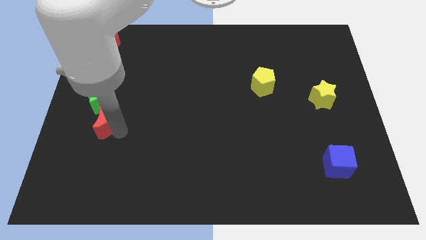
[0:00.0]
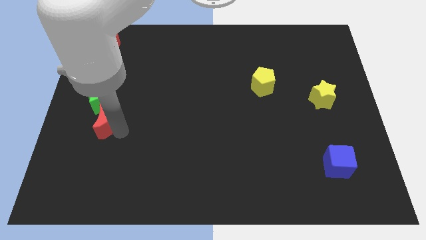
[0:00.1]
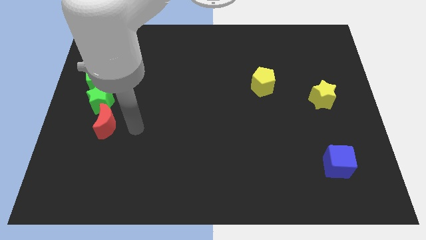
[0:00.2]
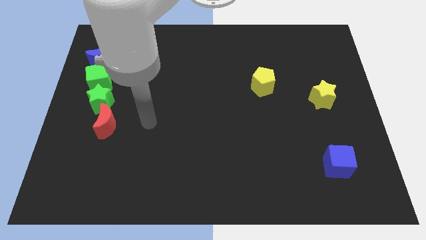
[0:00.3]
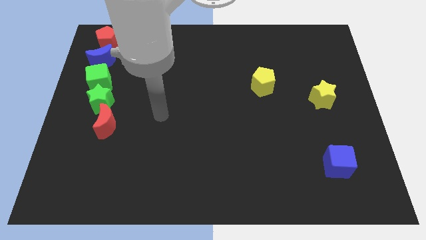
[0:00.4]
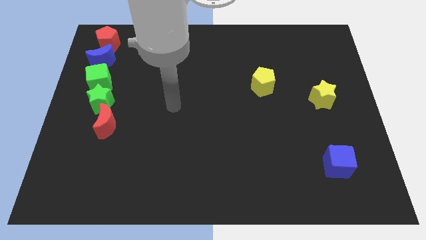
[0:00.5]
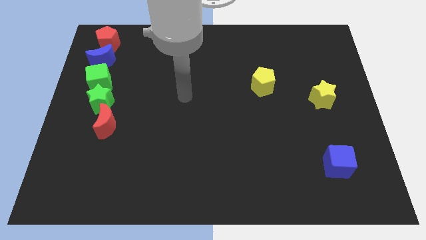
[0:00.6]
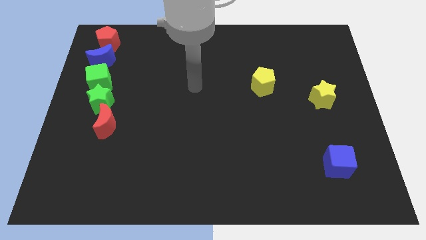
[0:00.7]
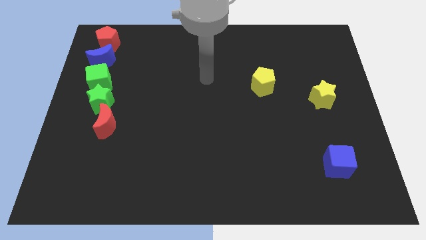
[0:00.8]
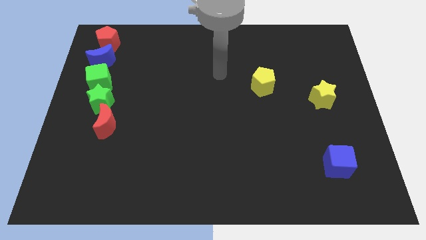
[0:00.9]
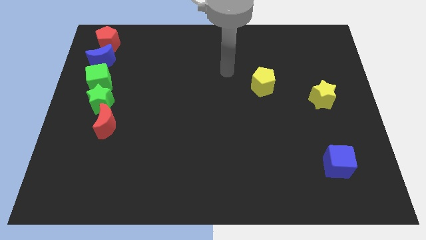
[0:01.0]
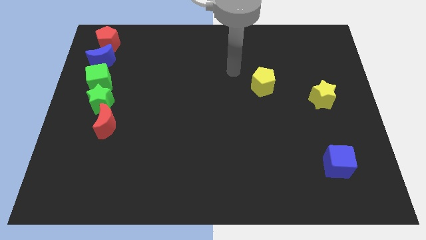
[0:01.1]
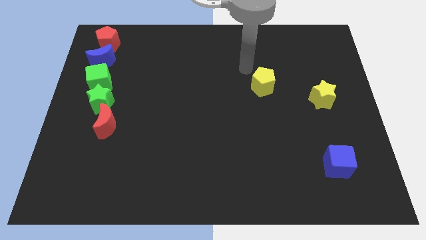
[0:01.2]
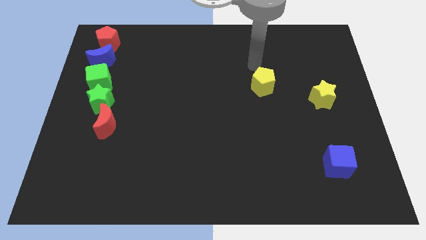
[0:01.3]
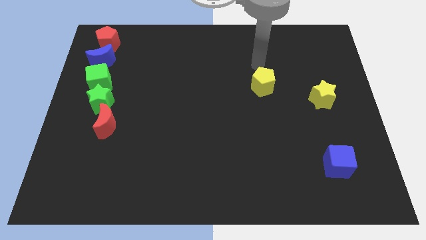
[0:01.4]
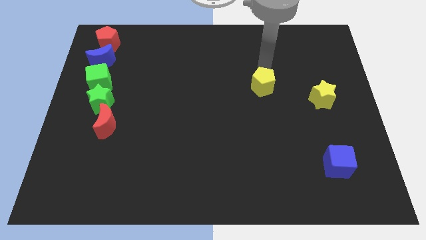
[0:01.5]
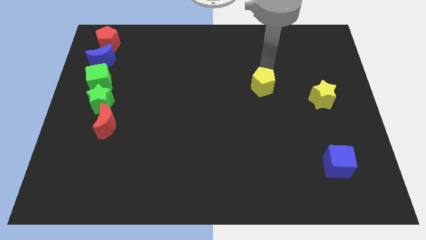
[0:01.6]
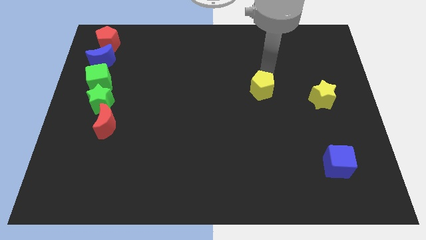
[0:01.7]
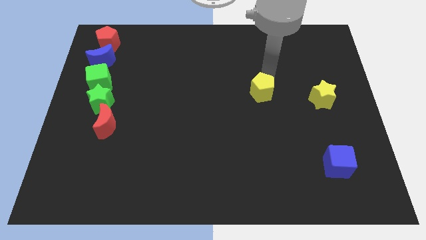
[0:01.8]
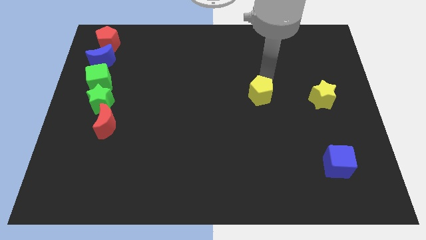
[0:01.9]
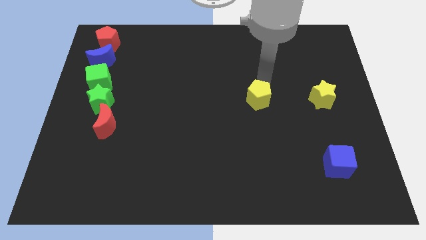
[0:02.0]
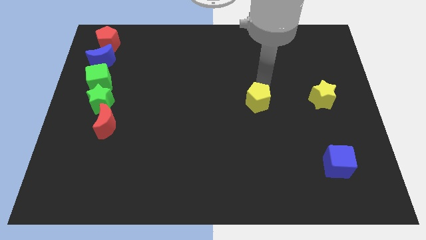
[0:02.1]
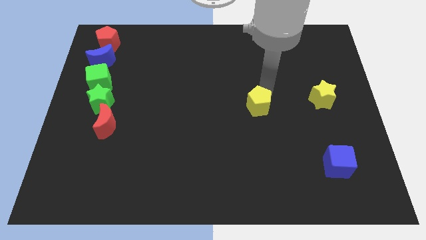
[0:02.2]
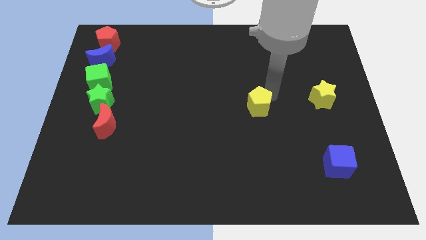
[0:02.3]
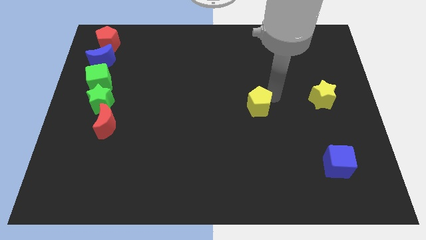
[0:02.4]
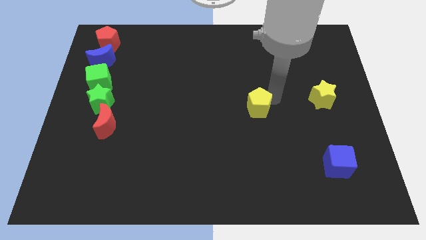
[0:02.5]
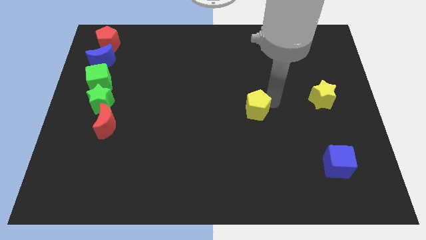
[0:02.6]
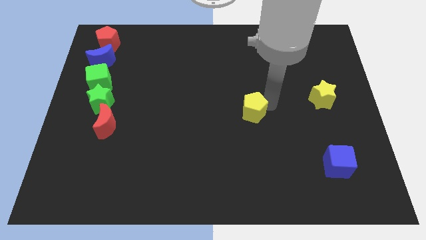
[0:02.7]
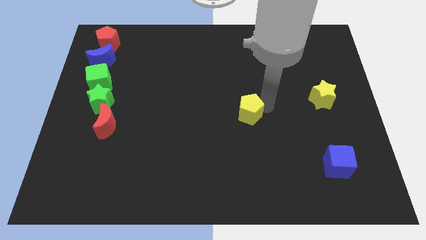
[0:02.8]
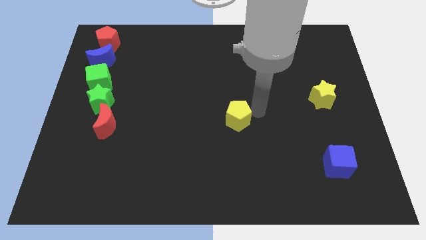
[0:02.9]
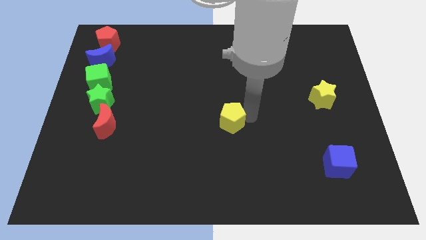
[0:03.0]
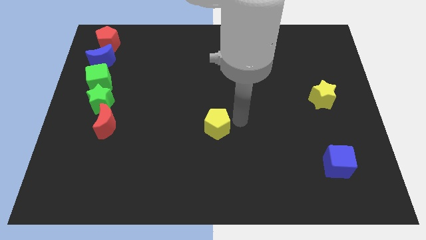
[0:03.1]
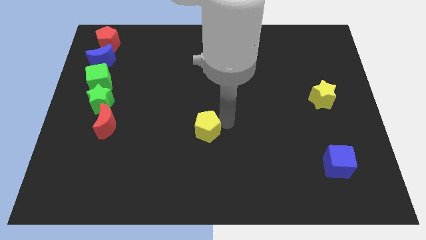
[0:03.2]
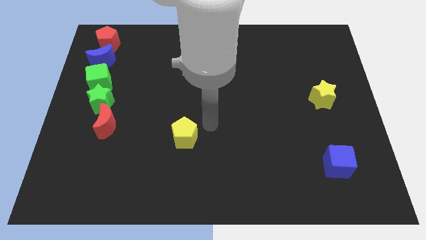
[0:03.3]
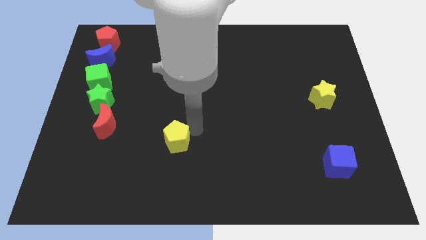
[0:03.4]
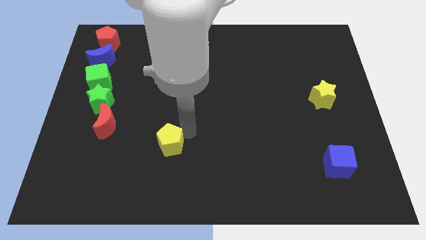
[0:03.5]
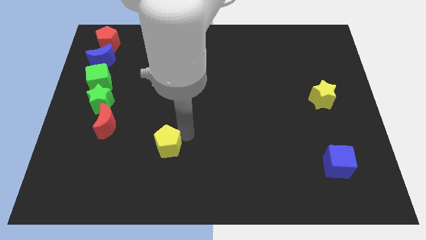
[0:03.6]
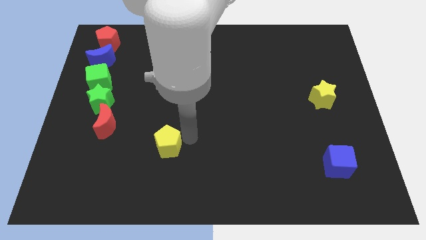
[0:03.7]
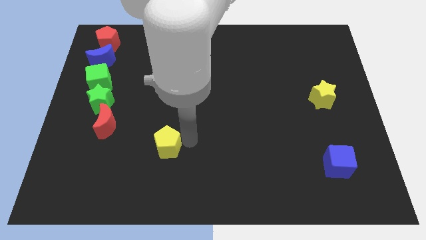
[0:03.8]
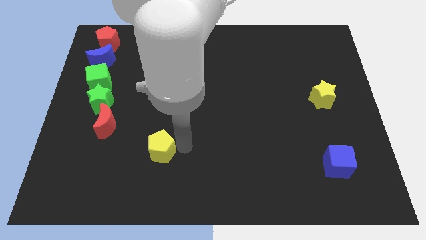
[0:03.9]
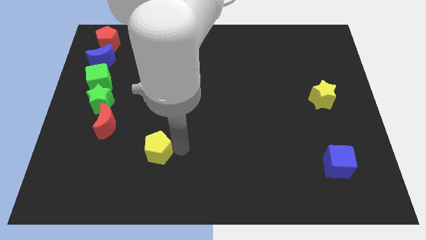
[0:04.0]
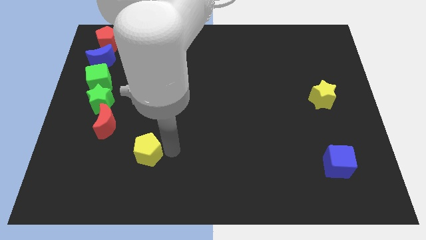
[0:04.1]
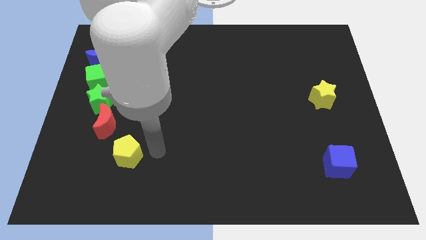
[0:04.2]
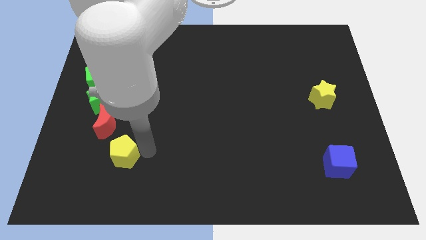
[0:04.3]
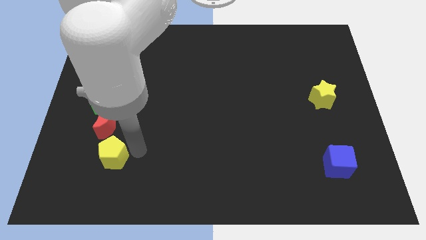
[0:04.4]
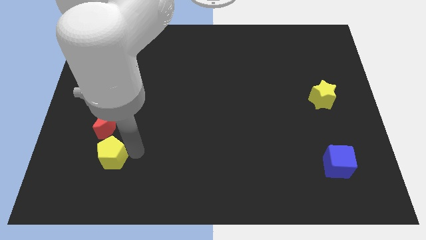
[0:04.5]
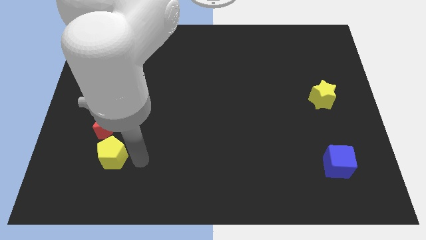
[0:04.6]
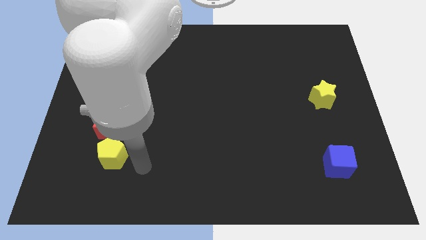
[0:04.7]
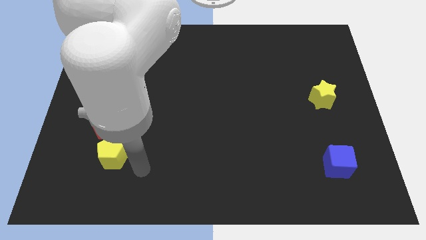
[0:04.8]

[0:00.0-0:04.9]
place yellow pentagon below below red moon

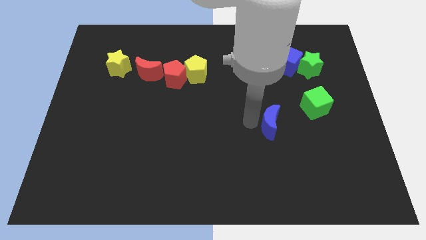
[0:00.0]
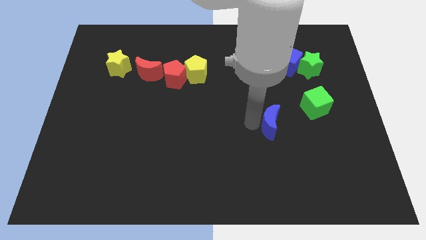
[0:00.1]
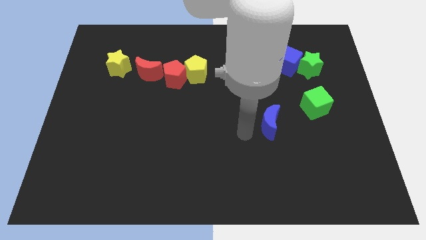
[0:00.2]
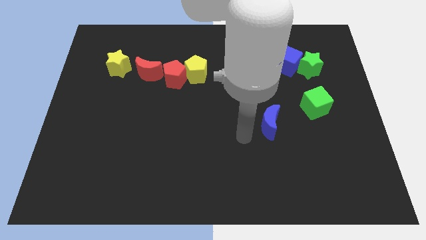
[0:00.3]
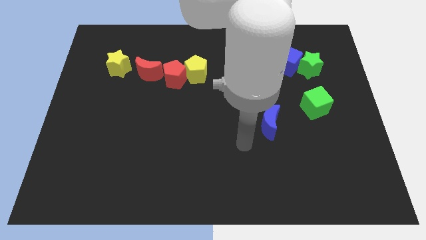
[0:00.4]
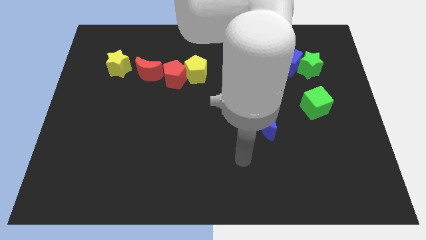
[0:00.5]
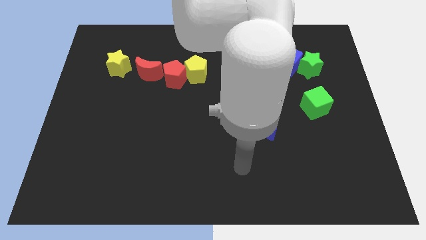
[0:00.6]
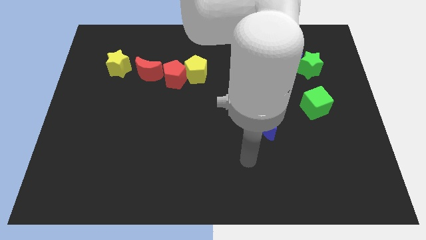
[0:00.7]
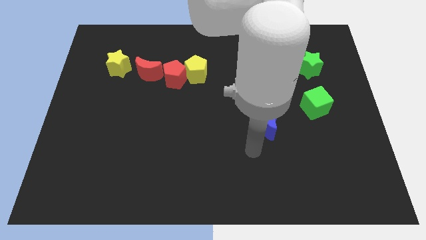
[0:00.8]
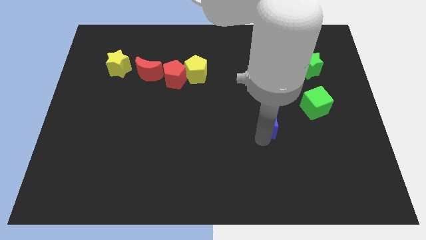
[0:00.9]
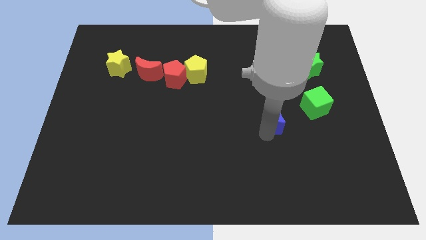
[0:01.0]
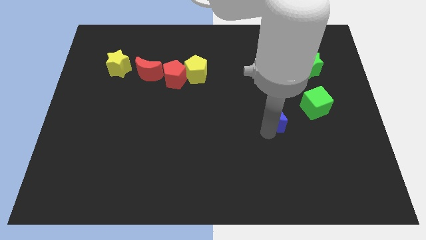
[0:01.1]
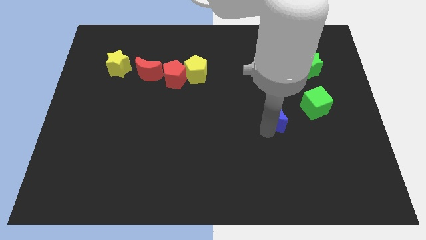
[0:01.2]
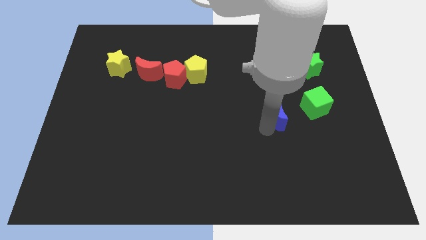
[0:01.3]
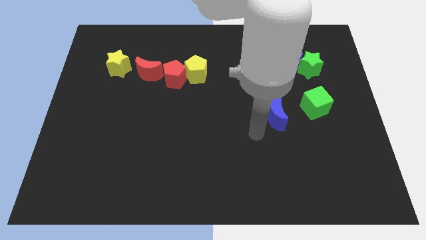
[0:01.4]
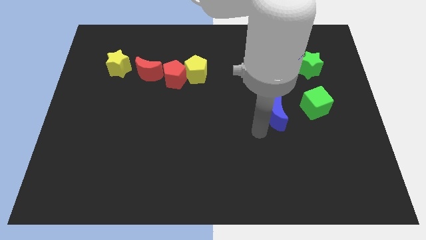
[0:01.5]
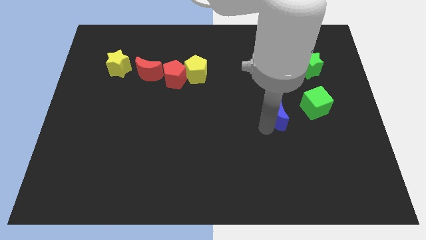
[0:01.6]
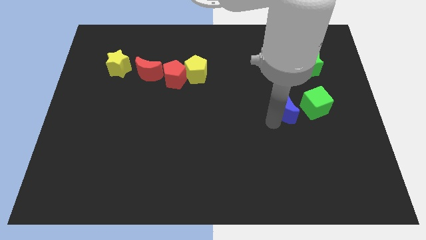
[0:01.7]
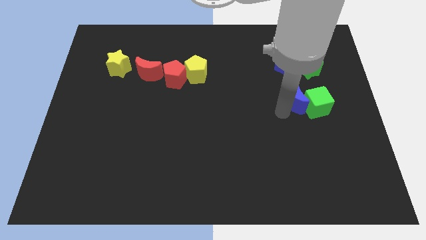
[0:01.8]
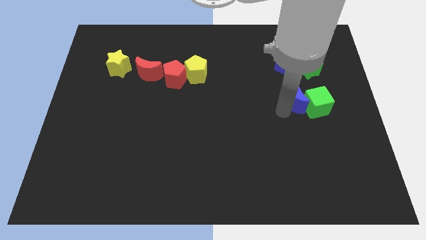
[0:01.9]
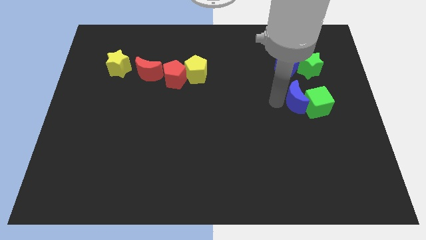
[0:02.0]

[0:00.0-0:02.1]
move the blue moon into the green cube

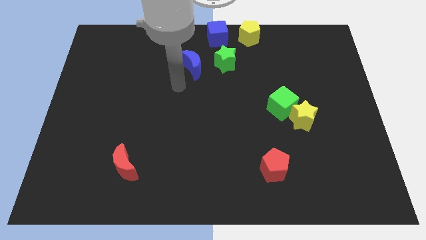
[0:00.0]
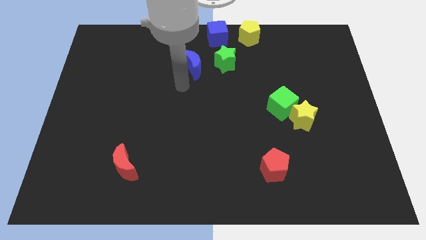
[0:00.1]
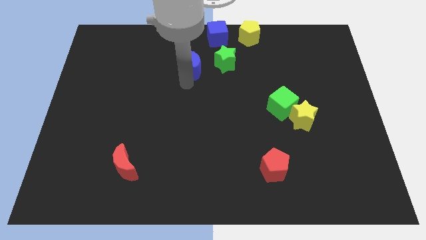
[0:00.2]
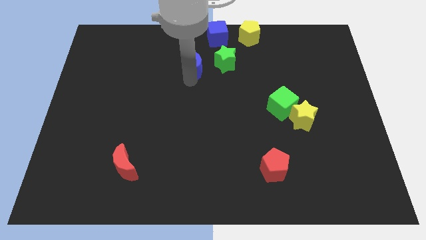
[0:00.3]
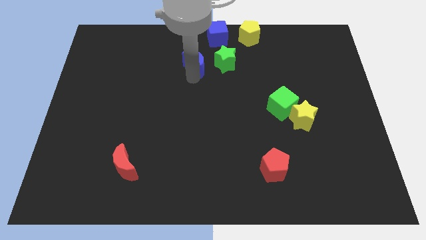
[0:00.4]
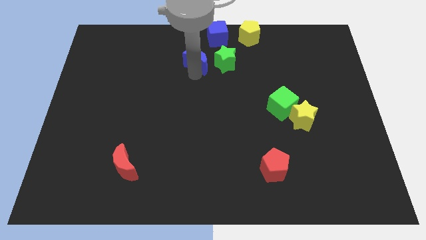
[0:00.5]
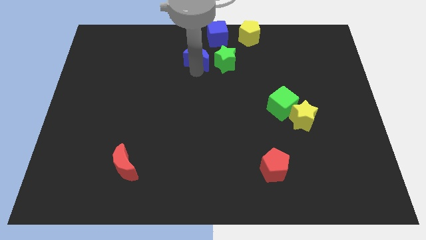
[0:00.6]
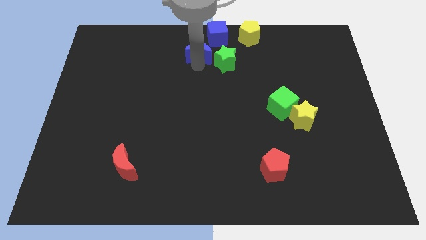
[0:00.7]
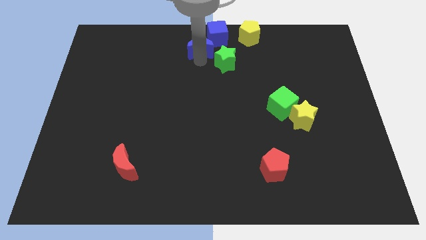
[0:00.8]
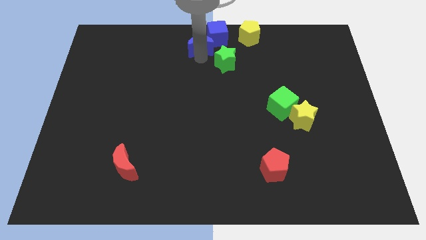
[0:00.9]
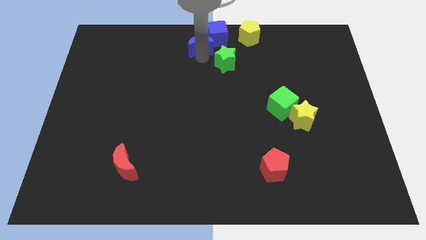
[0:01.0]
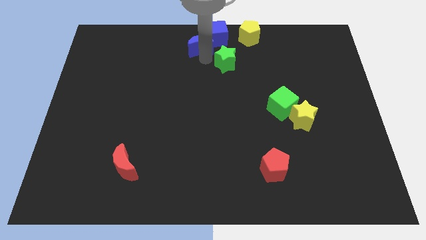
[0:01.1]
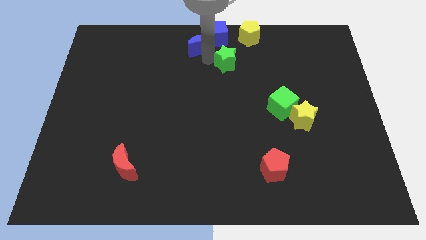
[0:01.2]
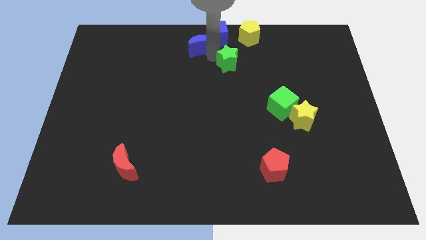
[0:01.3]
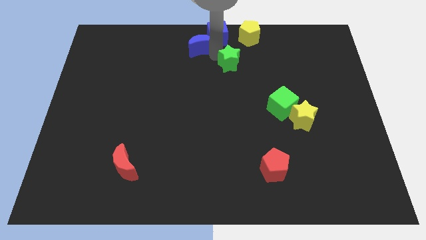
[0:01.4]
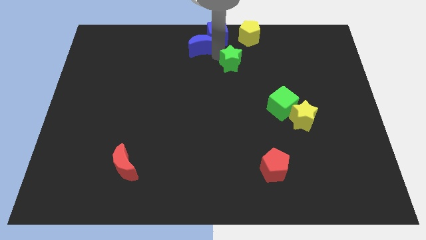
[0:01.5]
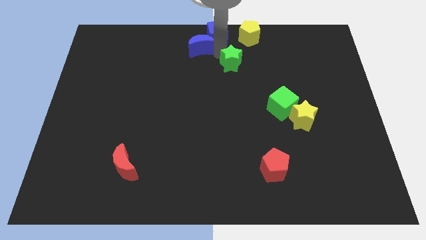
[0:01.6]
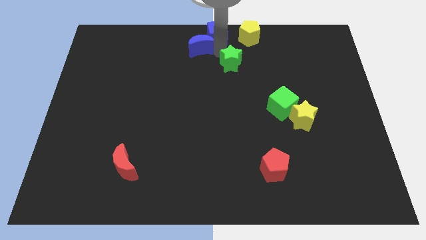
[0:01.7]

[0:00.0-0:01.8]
push the blue moon to the bottom left side of the blue cube

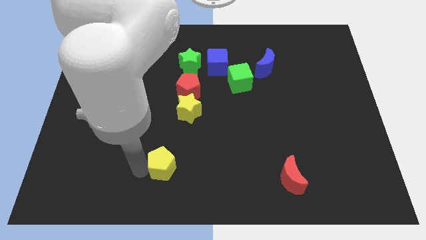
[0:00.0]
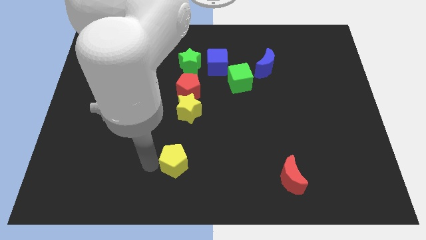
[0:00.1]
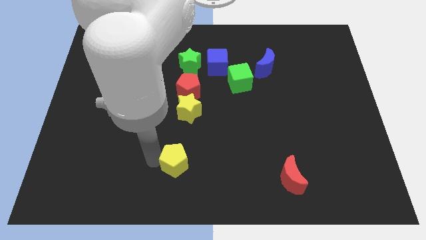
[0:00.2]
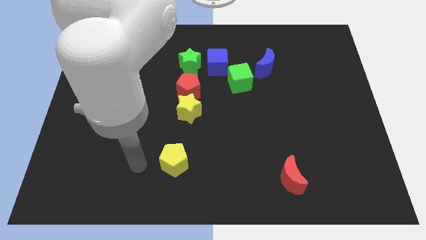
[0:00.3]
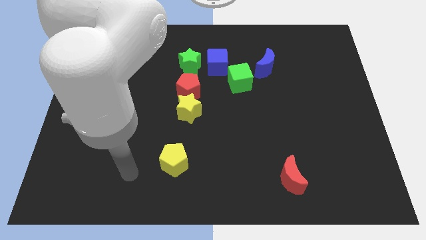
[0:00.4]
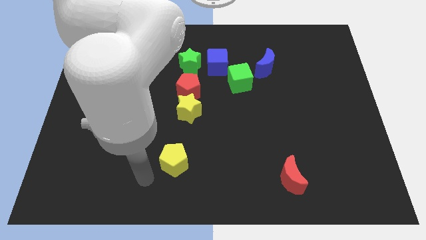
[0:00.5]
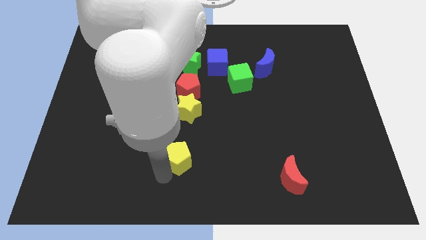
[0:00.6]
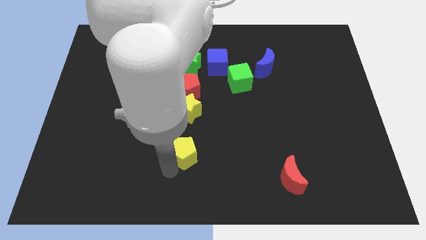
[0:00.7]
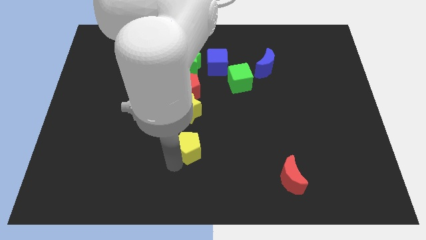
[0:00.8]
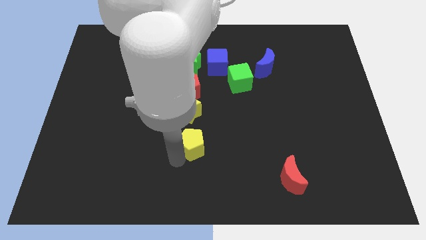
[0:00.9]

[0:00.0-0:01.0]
push yellow pentagon vertically below yellow star
